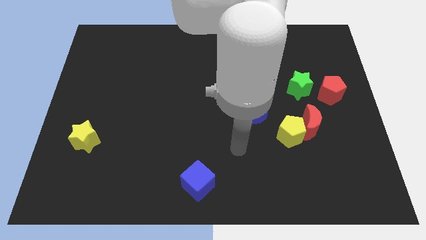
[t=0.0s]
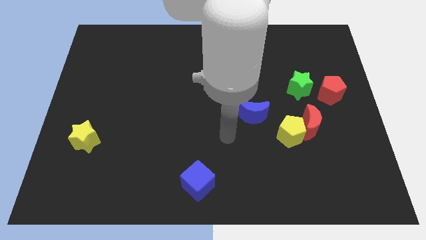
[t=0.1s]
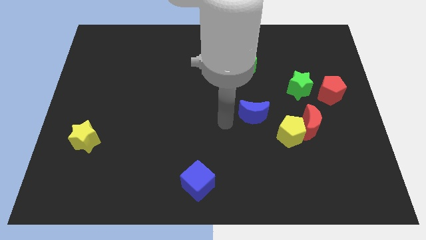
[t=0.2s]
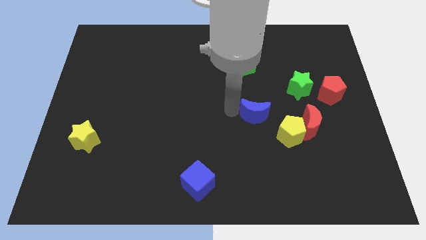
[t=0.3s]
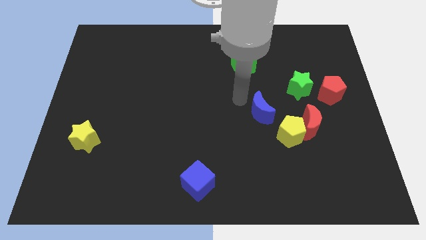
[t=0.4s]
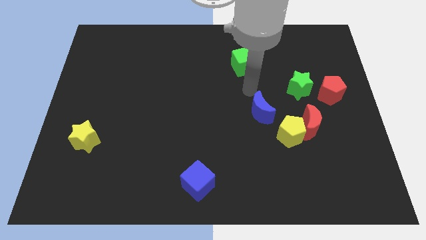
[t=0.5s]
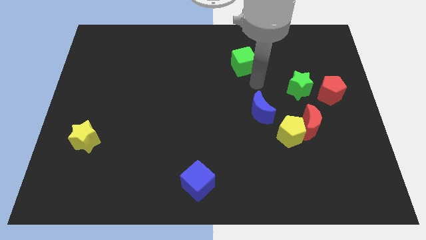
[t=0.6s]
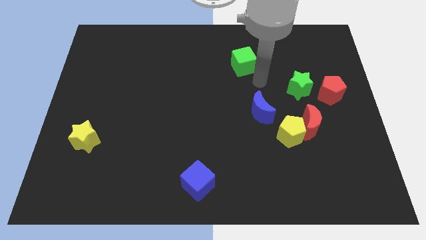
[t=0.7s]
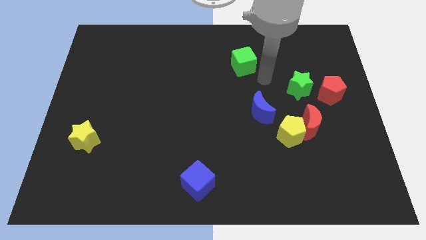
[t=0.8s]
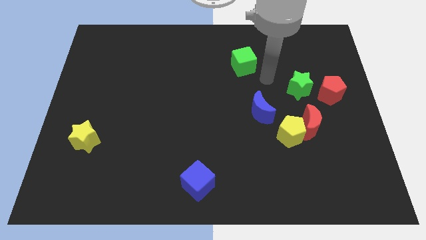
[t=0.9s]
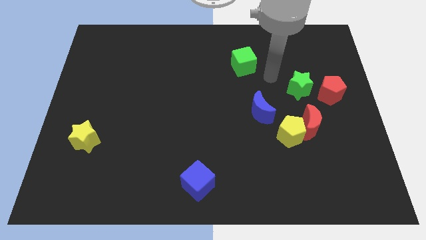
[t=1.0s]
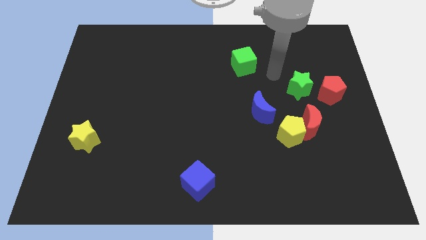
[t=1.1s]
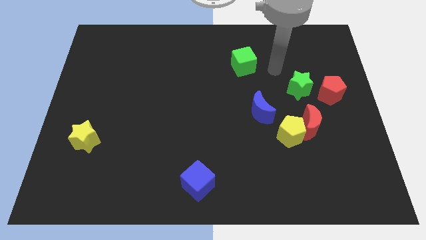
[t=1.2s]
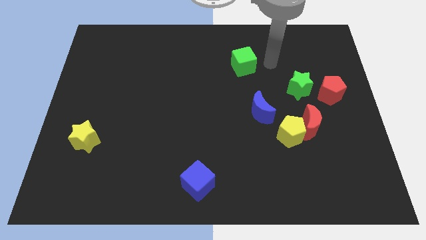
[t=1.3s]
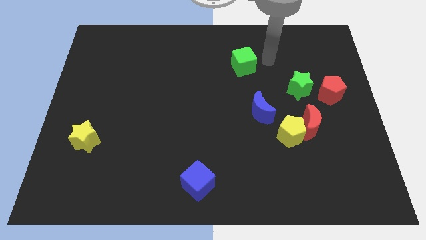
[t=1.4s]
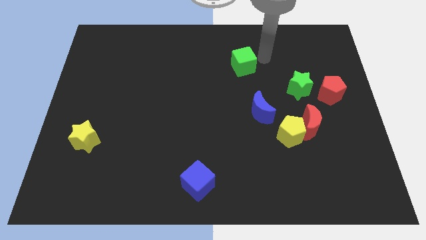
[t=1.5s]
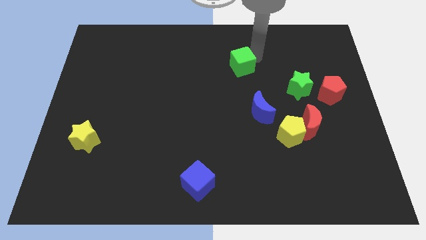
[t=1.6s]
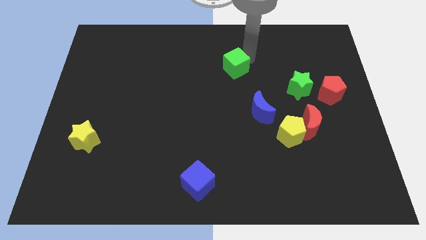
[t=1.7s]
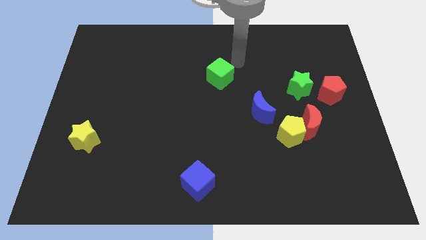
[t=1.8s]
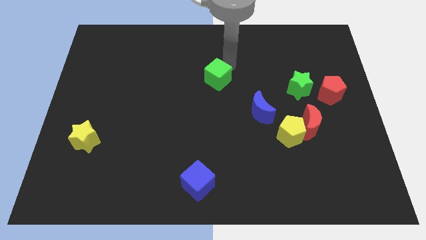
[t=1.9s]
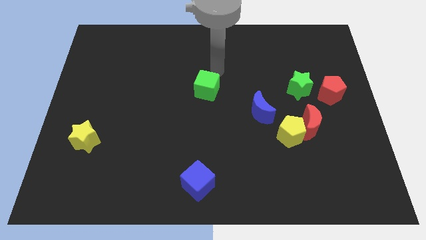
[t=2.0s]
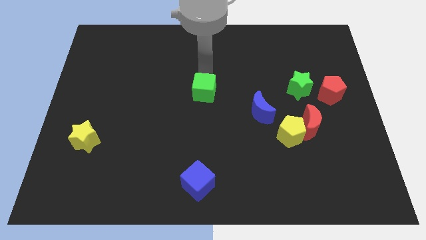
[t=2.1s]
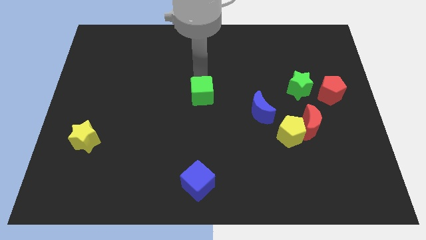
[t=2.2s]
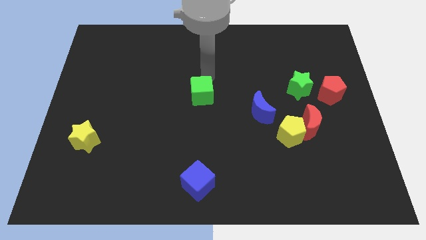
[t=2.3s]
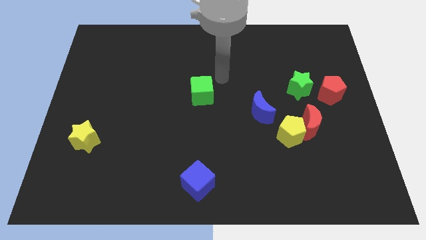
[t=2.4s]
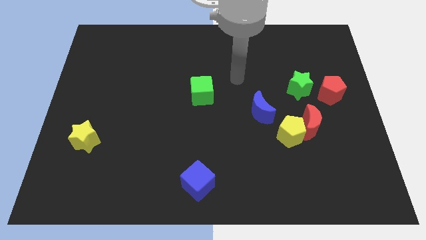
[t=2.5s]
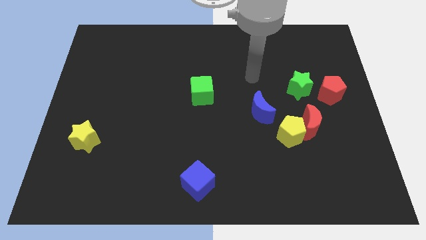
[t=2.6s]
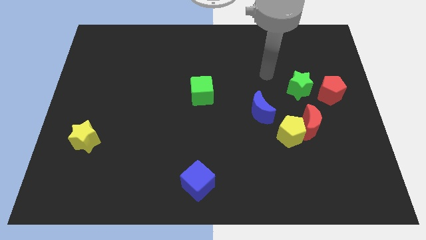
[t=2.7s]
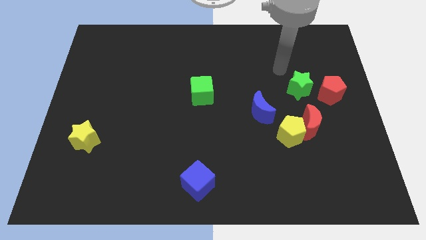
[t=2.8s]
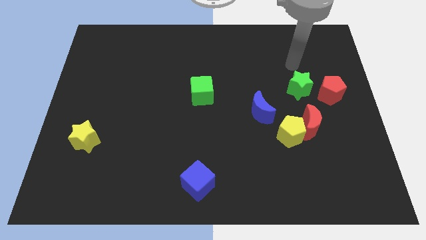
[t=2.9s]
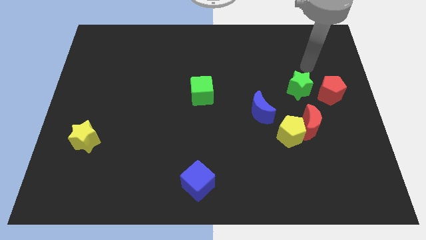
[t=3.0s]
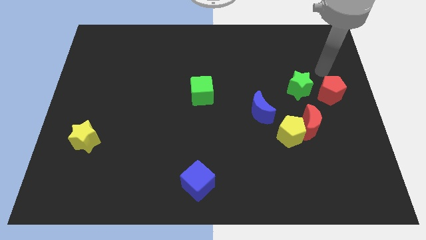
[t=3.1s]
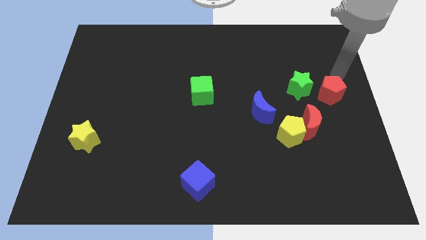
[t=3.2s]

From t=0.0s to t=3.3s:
place the green cube above the blue cube

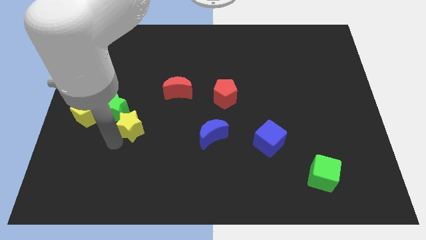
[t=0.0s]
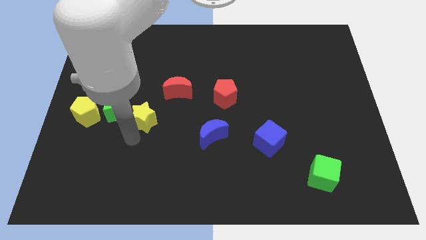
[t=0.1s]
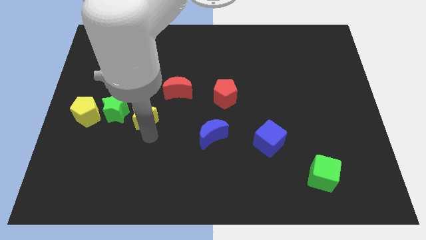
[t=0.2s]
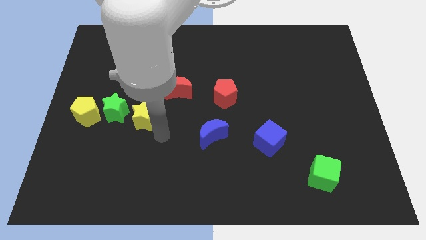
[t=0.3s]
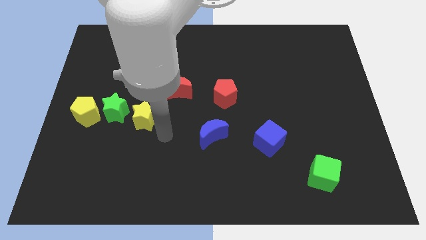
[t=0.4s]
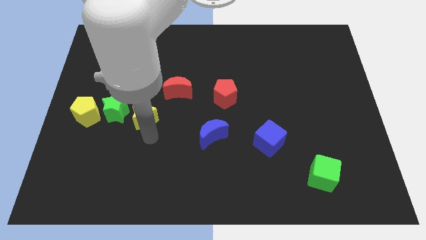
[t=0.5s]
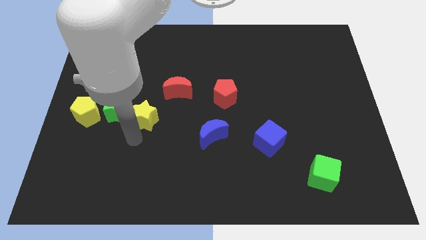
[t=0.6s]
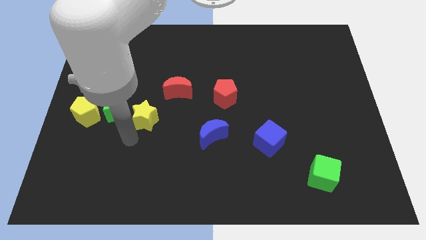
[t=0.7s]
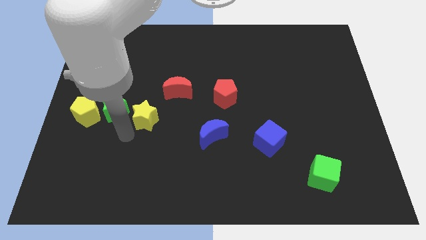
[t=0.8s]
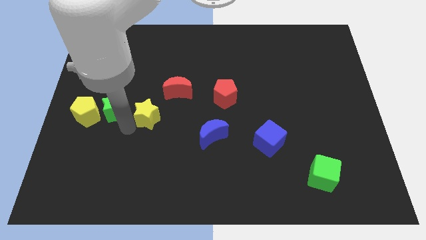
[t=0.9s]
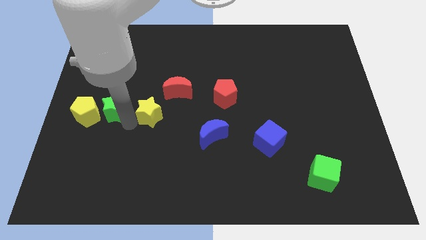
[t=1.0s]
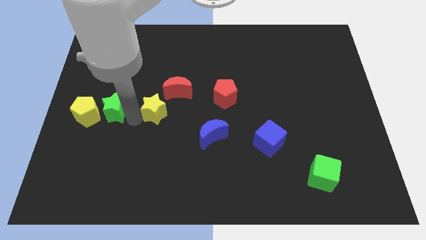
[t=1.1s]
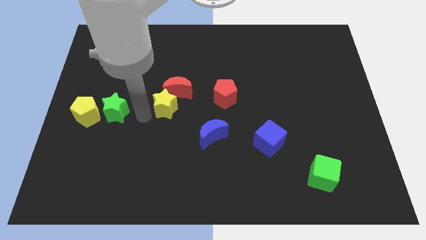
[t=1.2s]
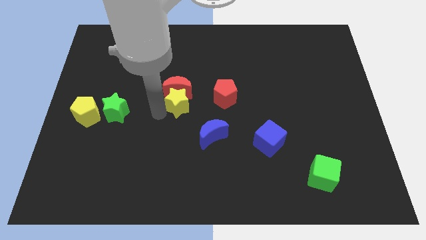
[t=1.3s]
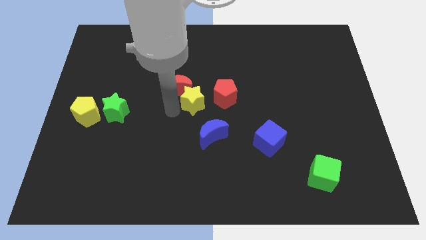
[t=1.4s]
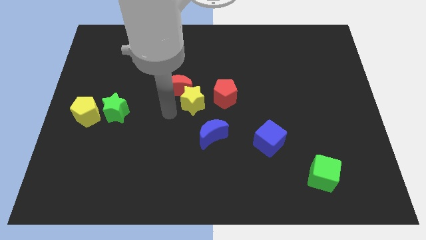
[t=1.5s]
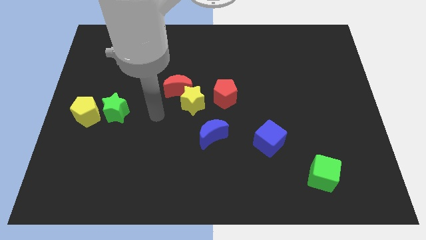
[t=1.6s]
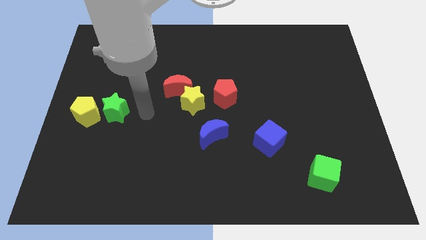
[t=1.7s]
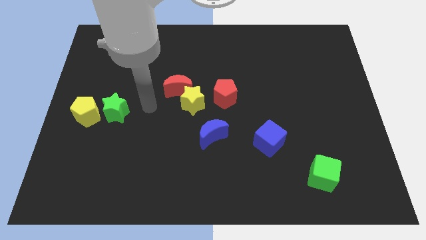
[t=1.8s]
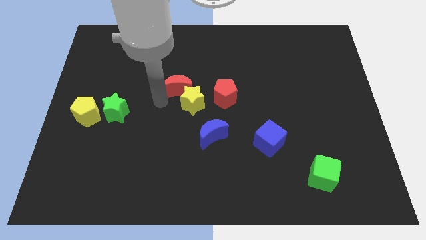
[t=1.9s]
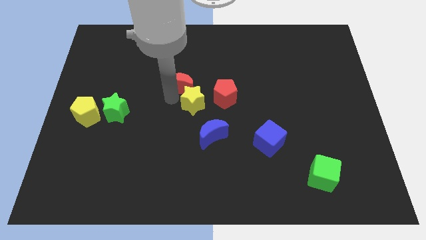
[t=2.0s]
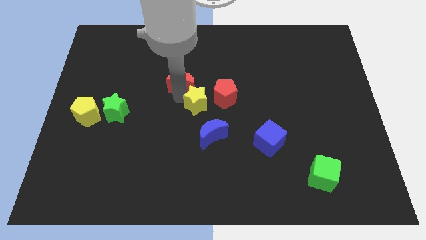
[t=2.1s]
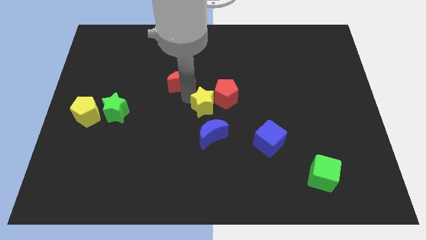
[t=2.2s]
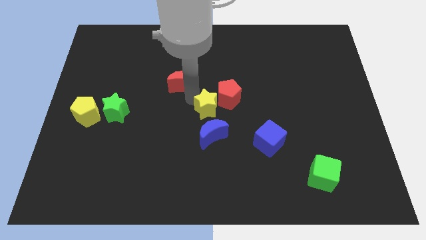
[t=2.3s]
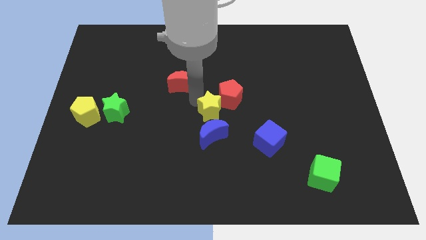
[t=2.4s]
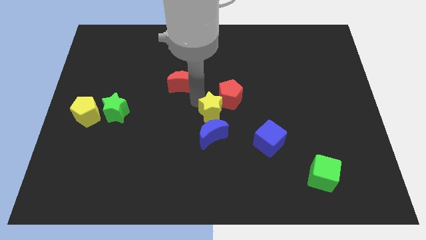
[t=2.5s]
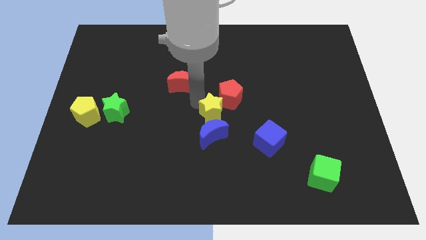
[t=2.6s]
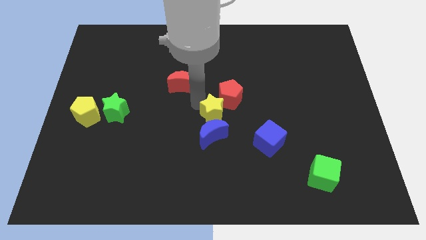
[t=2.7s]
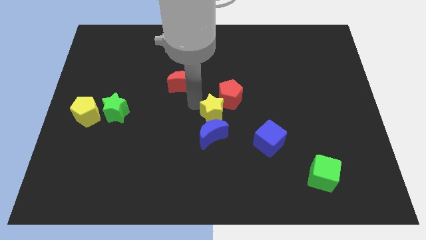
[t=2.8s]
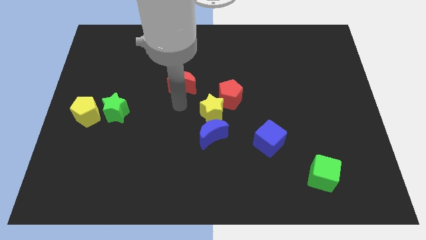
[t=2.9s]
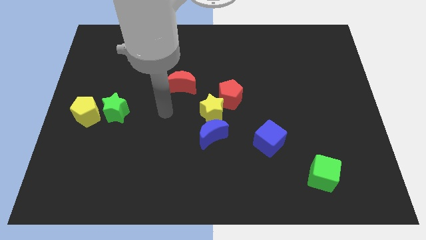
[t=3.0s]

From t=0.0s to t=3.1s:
push yellow star close to red pentagon

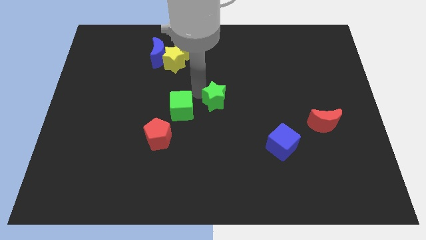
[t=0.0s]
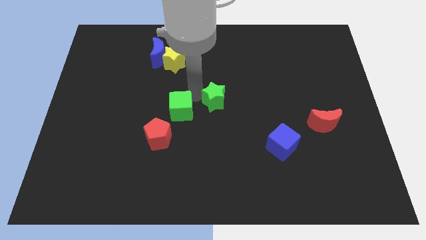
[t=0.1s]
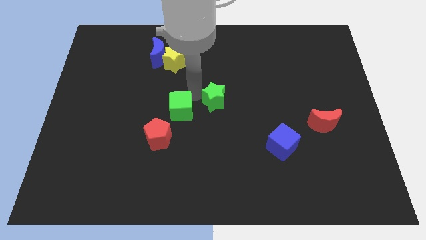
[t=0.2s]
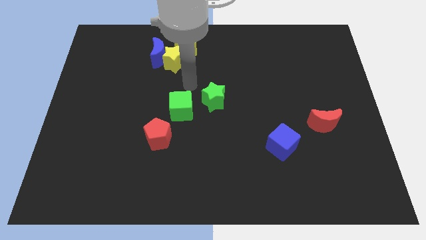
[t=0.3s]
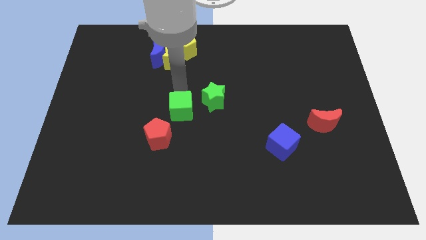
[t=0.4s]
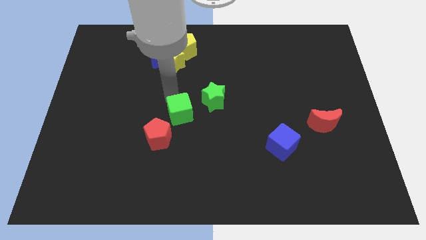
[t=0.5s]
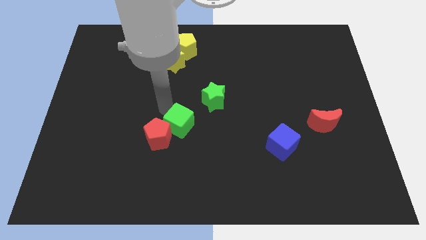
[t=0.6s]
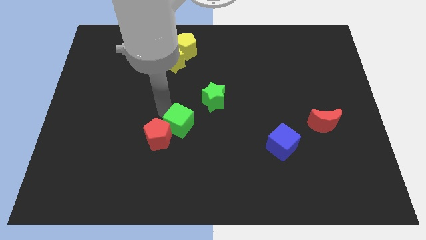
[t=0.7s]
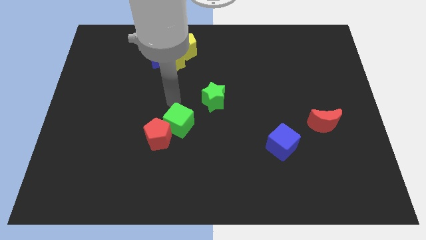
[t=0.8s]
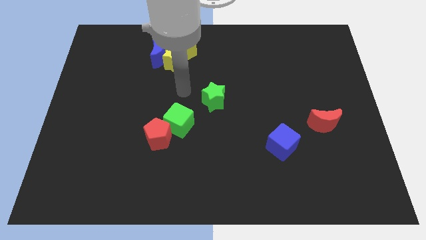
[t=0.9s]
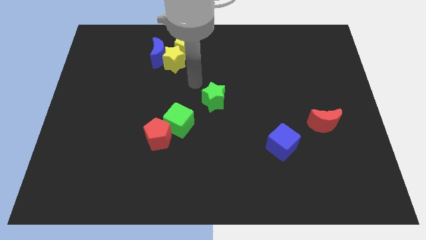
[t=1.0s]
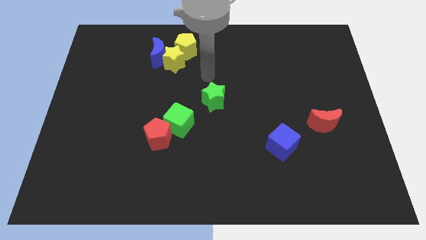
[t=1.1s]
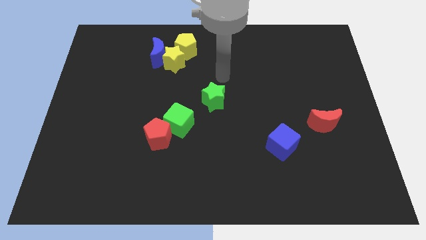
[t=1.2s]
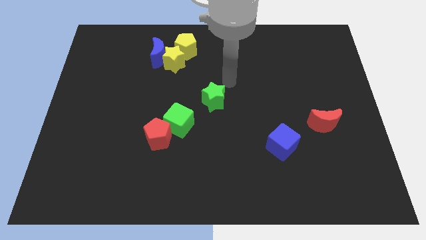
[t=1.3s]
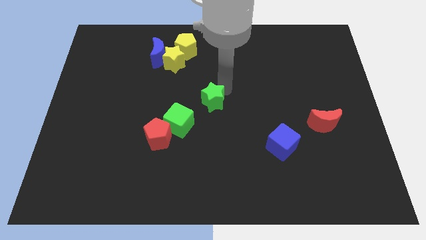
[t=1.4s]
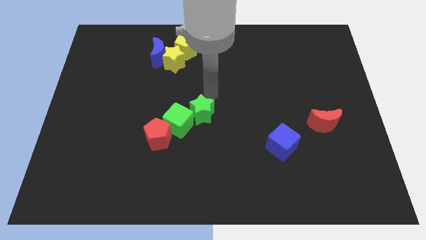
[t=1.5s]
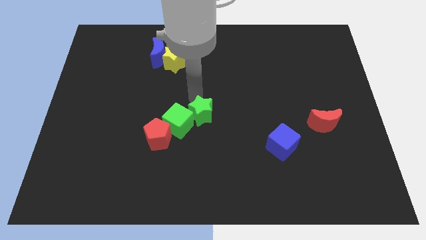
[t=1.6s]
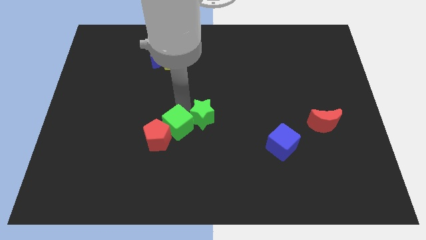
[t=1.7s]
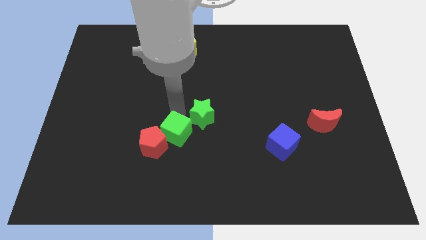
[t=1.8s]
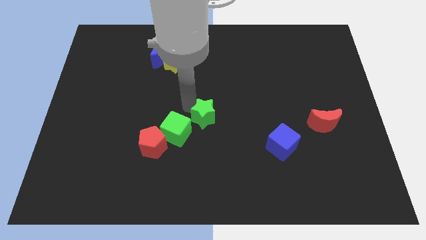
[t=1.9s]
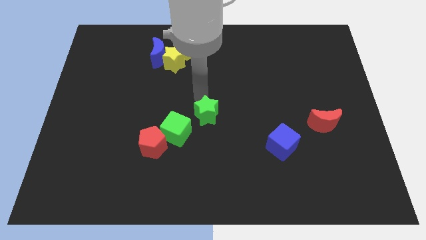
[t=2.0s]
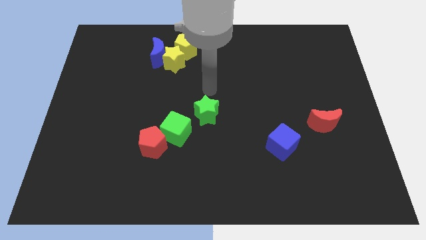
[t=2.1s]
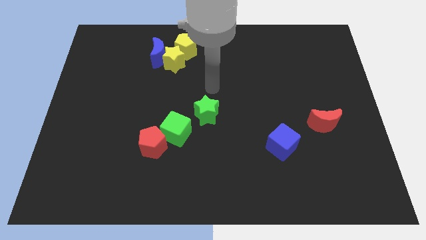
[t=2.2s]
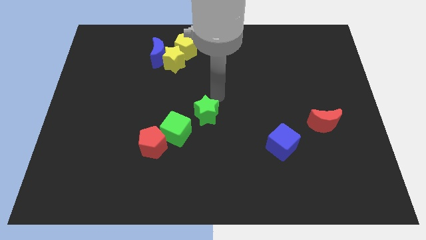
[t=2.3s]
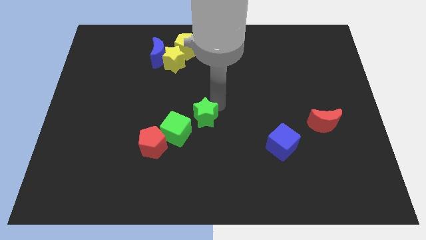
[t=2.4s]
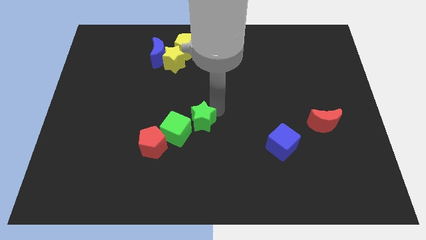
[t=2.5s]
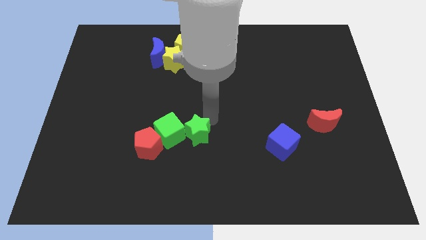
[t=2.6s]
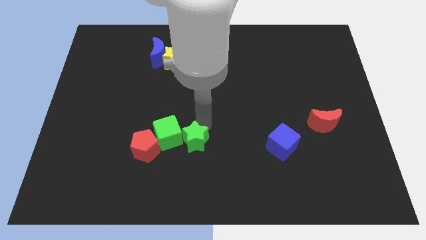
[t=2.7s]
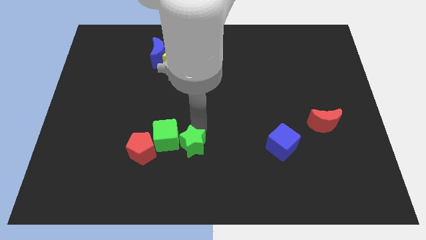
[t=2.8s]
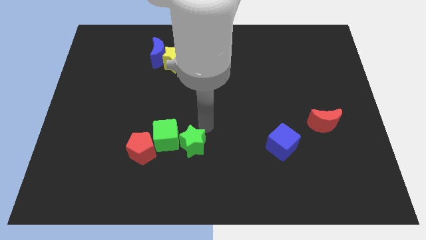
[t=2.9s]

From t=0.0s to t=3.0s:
put the green star into the green cube
